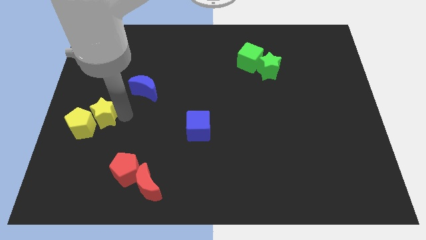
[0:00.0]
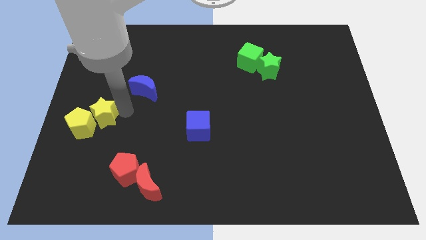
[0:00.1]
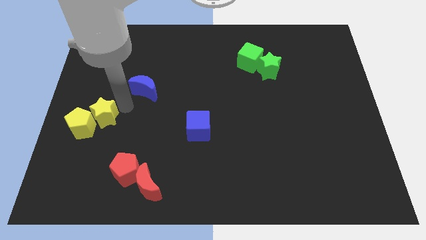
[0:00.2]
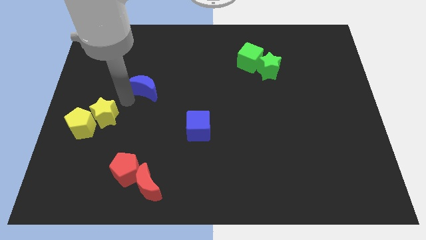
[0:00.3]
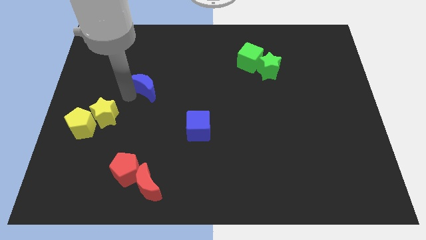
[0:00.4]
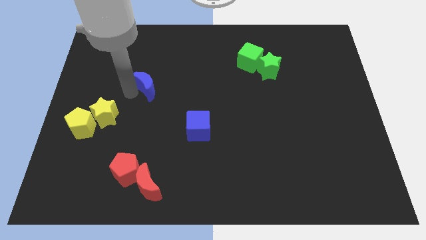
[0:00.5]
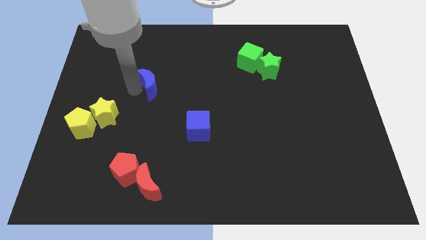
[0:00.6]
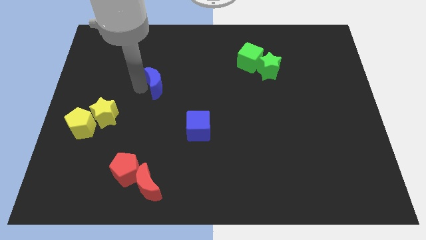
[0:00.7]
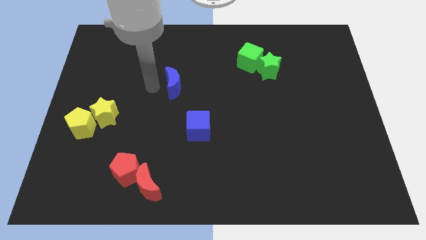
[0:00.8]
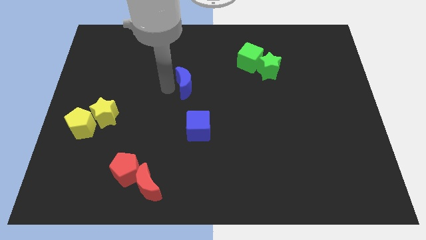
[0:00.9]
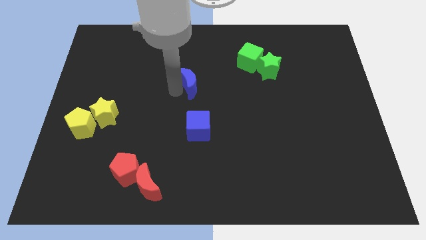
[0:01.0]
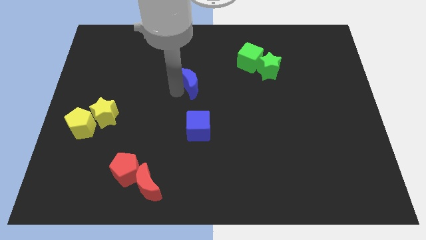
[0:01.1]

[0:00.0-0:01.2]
move the blue crescent vertically to the top of the blue cube

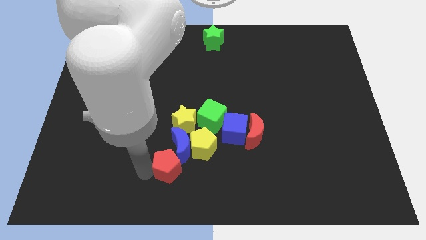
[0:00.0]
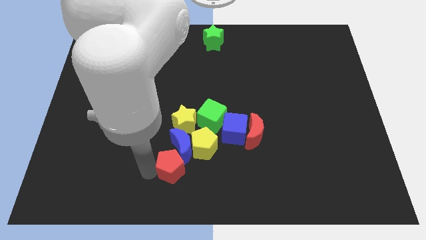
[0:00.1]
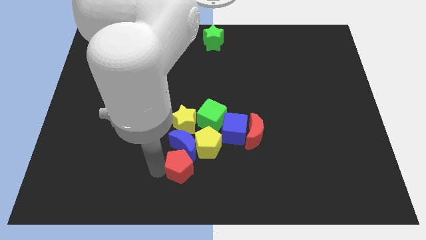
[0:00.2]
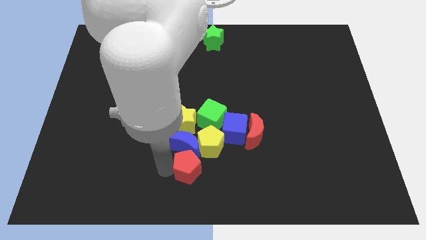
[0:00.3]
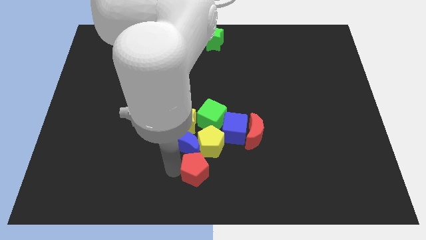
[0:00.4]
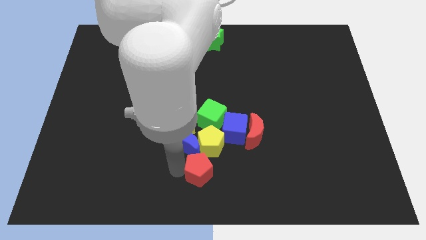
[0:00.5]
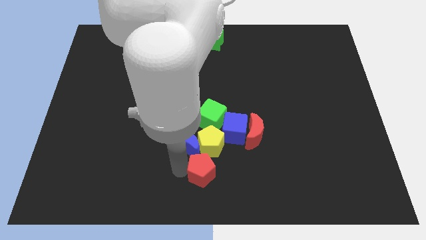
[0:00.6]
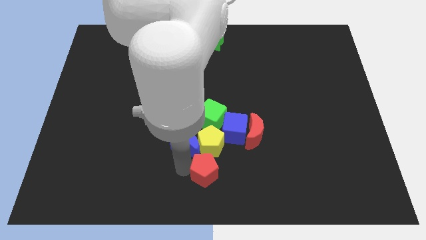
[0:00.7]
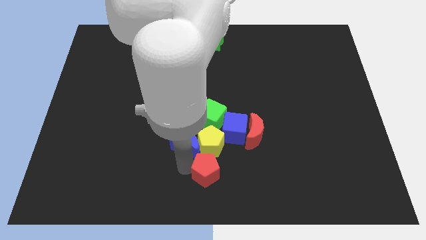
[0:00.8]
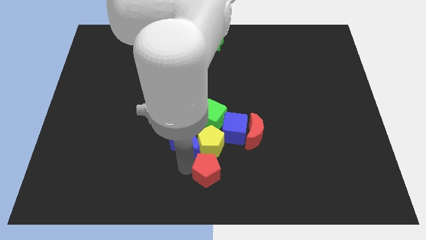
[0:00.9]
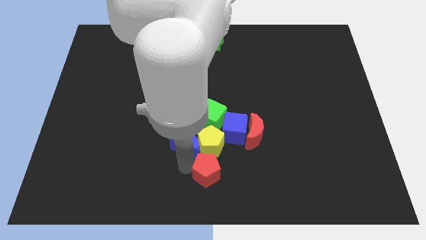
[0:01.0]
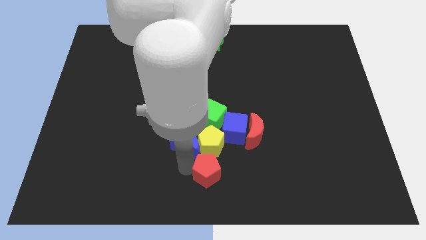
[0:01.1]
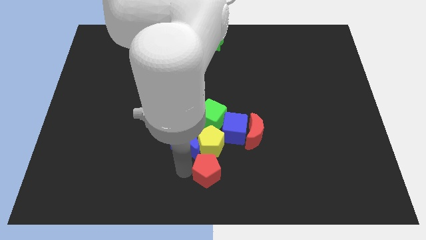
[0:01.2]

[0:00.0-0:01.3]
push the red pentagon down to the yellow pentagon

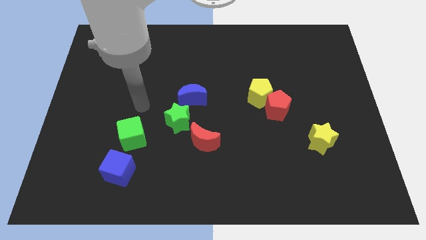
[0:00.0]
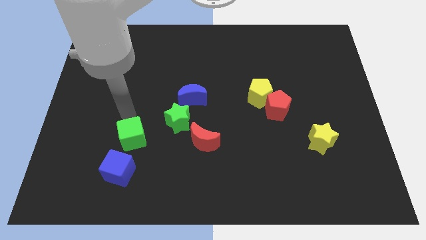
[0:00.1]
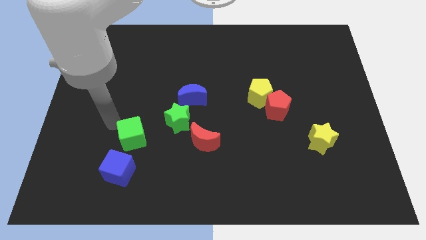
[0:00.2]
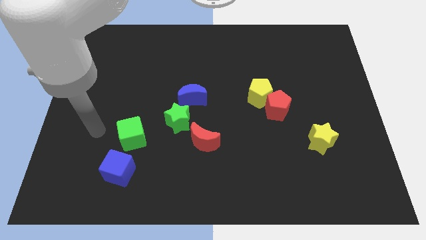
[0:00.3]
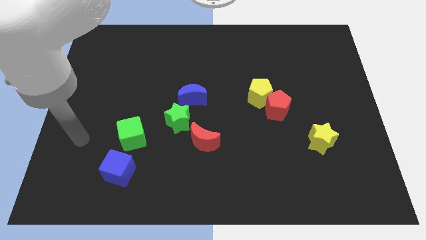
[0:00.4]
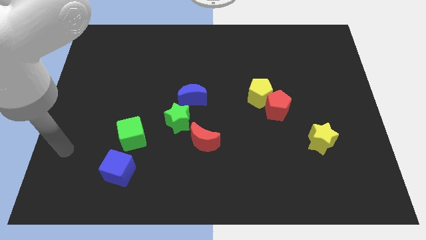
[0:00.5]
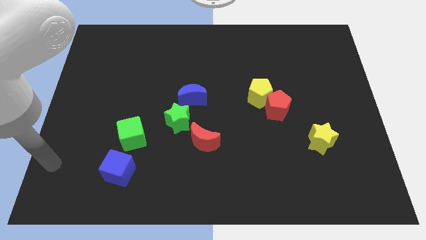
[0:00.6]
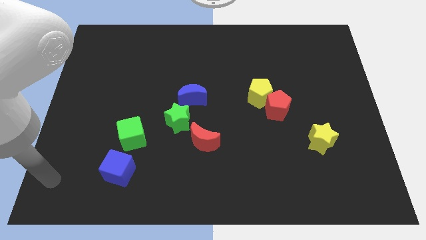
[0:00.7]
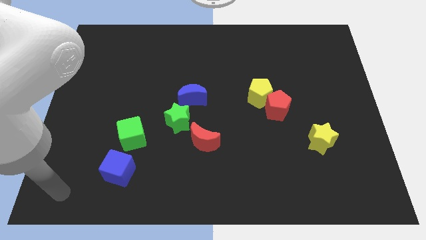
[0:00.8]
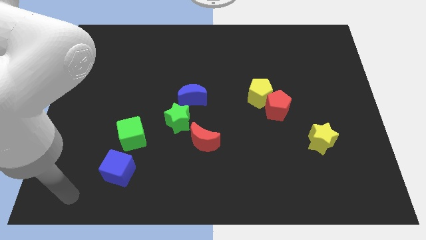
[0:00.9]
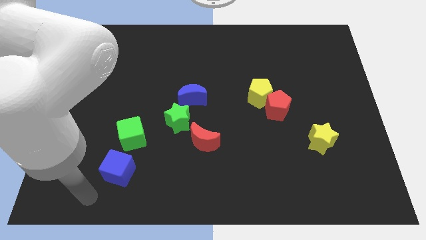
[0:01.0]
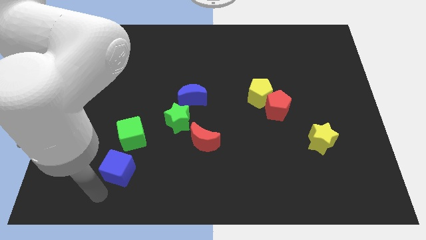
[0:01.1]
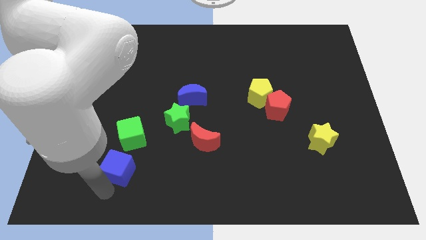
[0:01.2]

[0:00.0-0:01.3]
point your arm at the bottom of blue cube

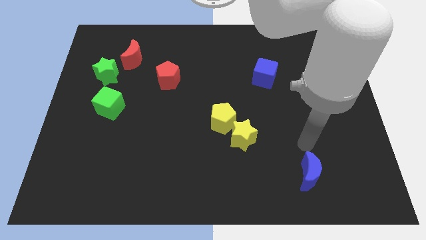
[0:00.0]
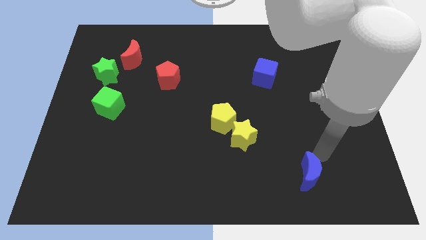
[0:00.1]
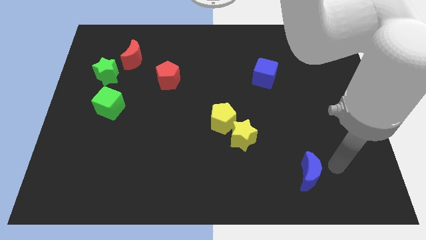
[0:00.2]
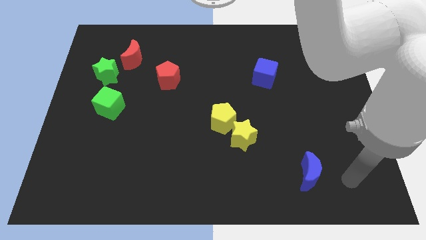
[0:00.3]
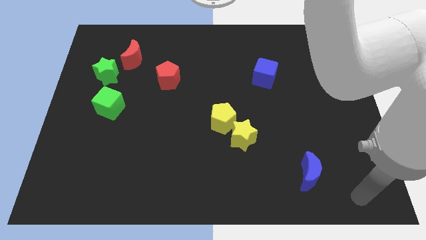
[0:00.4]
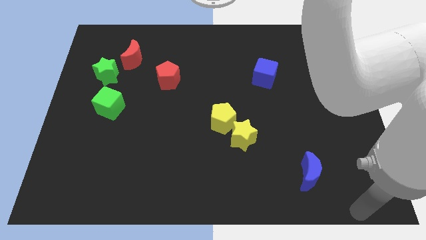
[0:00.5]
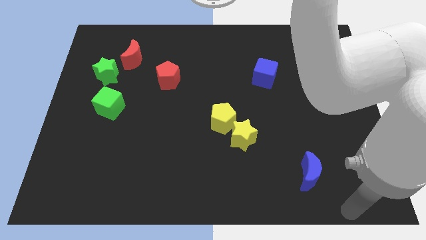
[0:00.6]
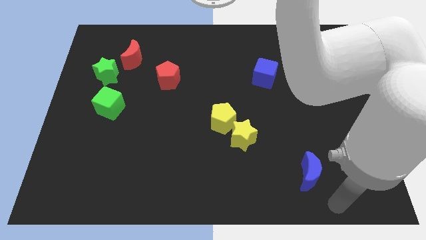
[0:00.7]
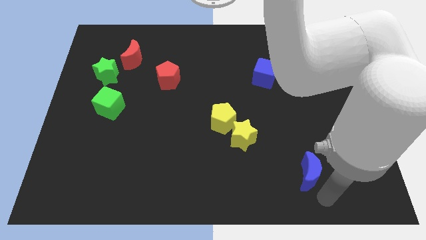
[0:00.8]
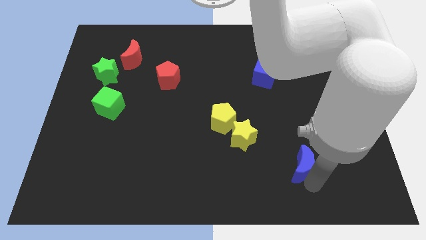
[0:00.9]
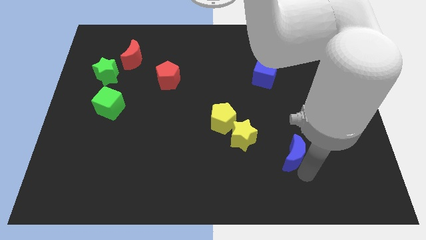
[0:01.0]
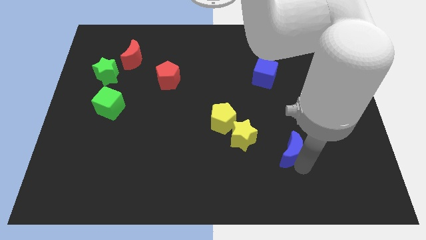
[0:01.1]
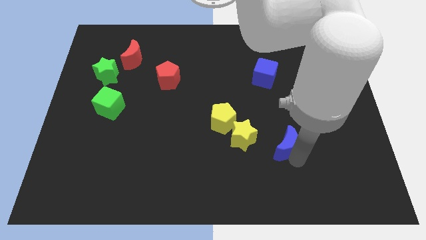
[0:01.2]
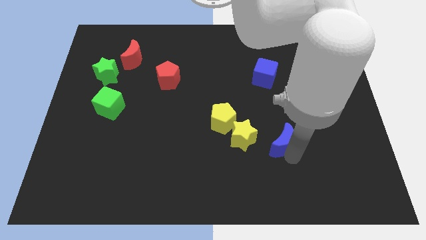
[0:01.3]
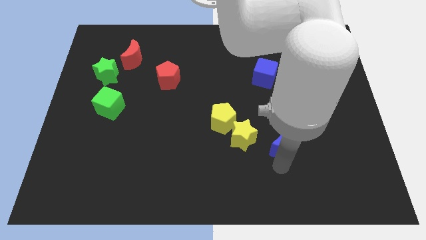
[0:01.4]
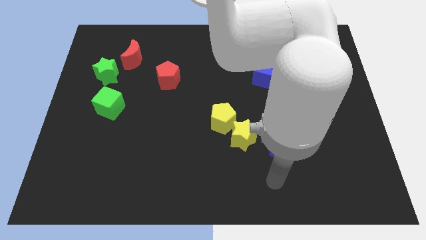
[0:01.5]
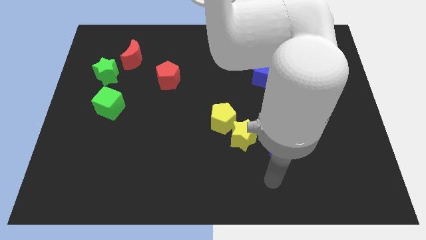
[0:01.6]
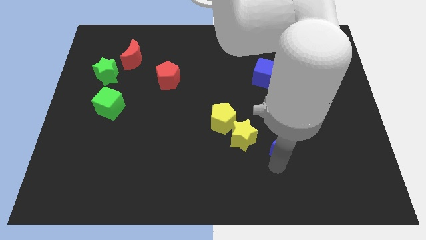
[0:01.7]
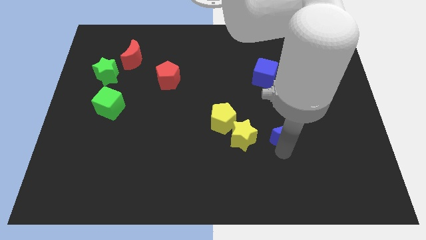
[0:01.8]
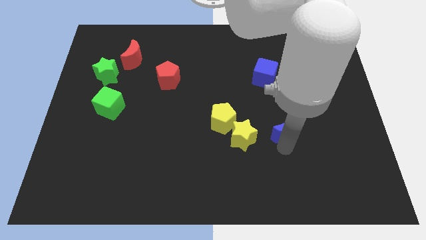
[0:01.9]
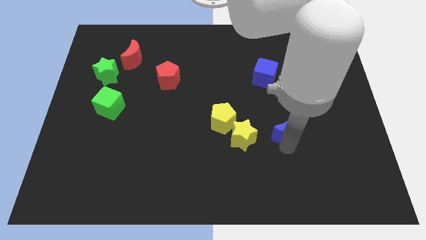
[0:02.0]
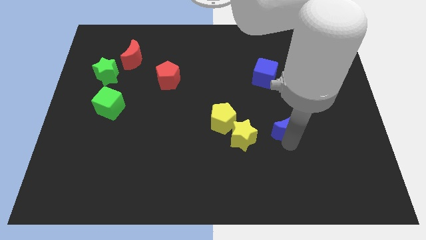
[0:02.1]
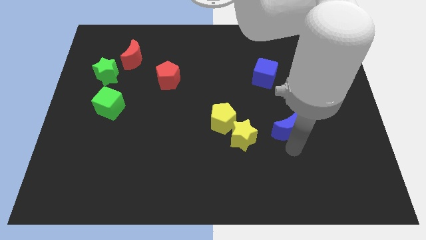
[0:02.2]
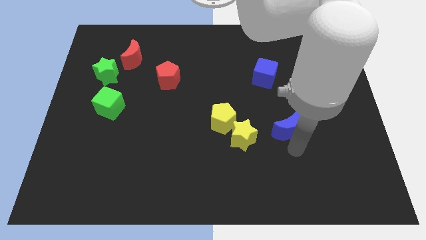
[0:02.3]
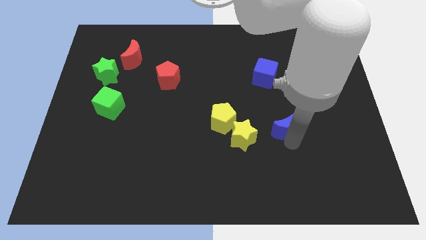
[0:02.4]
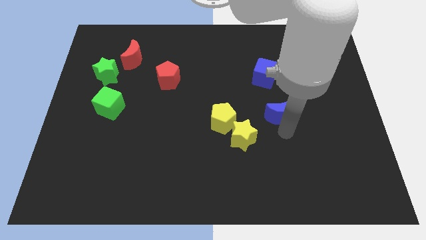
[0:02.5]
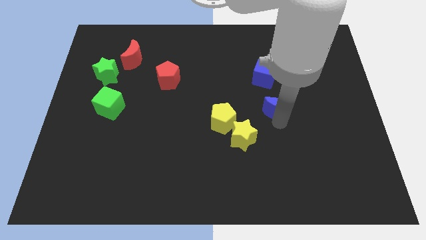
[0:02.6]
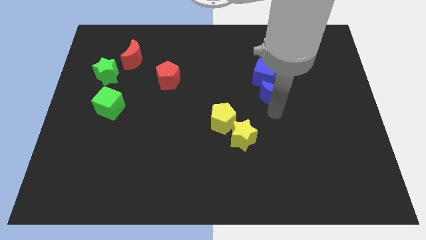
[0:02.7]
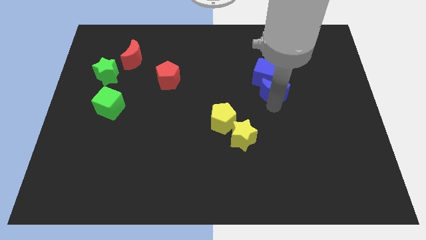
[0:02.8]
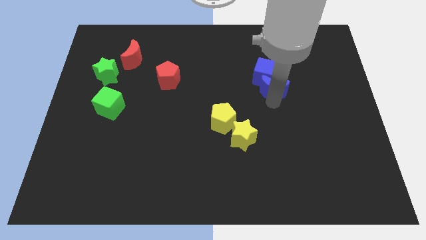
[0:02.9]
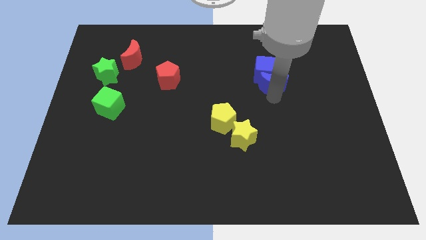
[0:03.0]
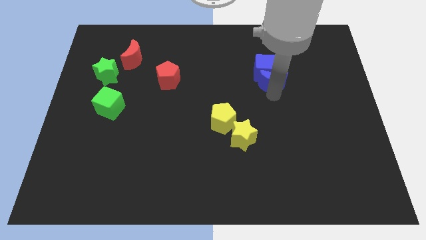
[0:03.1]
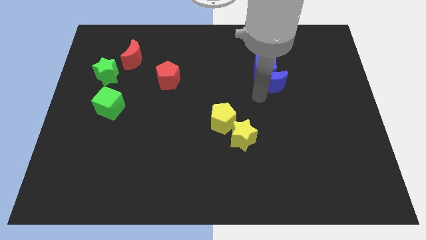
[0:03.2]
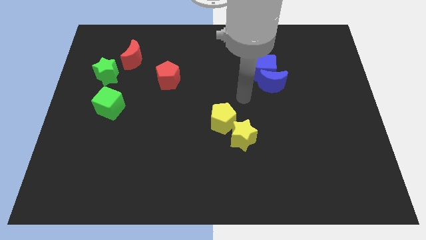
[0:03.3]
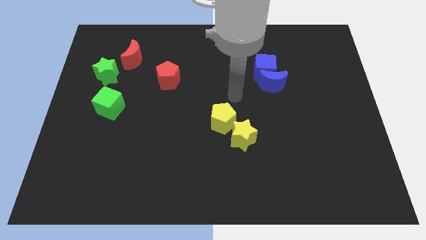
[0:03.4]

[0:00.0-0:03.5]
place the blue crescent close to the blue cube

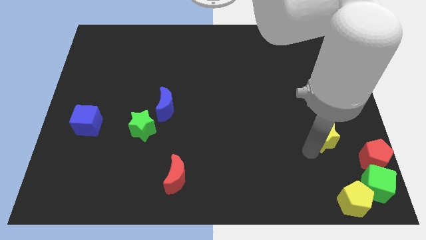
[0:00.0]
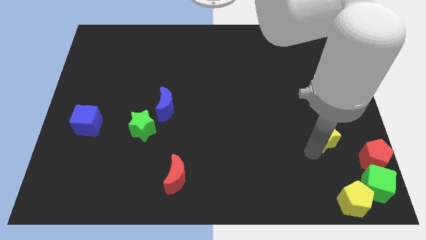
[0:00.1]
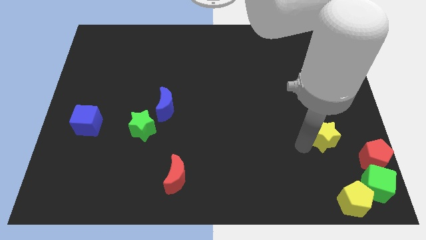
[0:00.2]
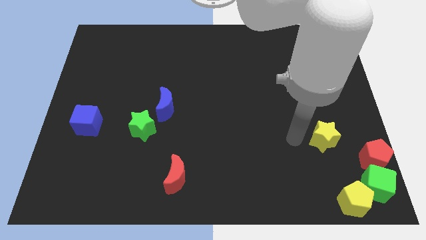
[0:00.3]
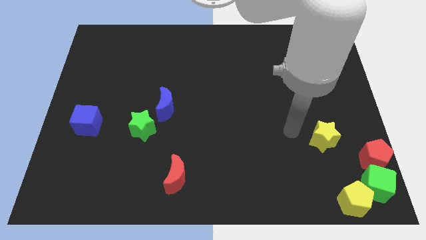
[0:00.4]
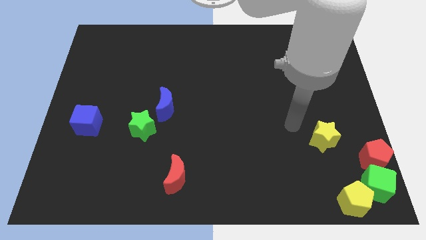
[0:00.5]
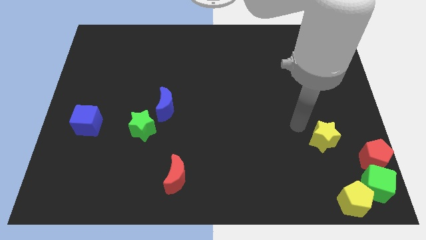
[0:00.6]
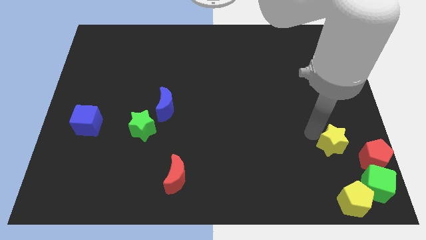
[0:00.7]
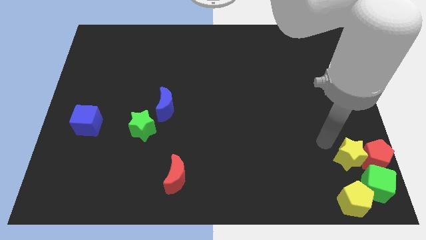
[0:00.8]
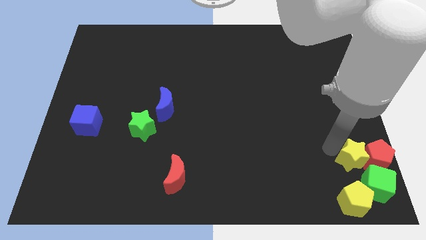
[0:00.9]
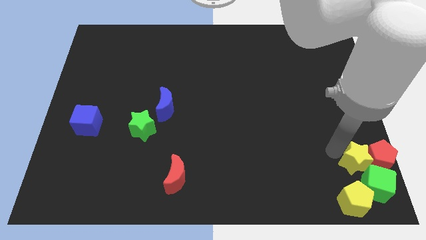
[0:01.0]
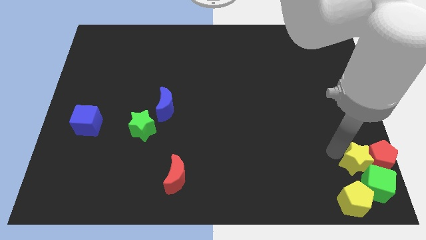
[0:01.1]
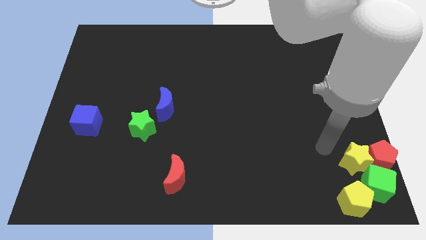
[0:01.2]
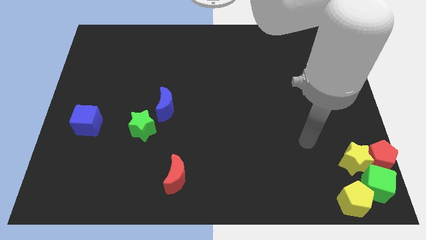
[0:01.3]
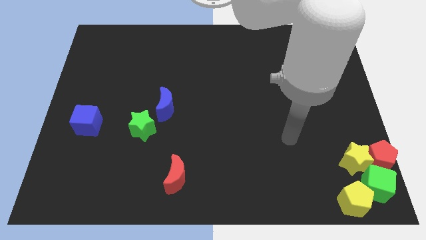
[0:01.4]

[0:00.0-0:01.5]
push yellow star into red pentagon
